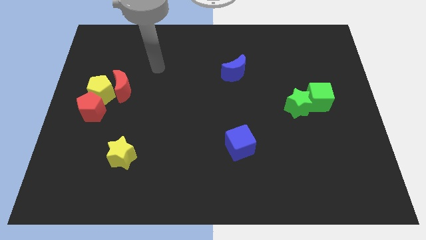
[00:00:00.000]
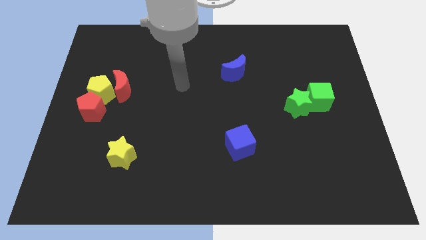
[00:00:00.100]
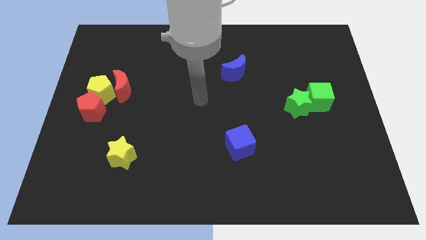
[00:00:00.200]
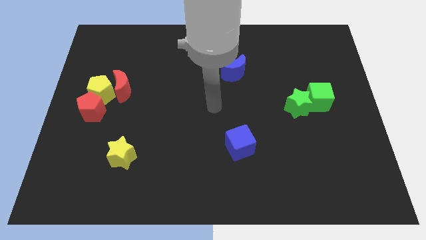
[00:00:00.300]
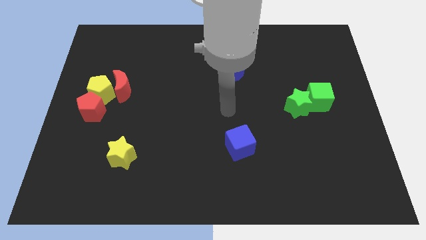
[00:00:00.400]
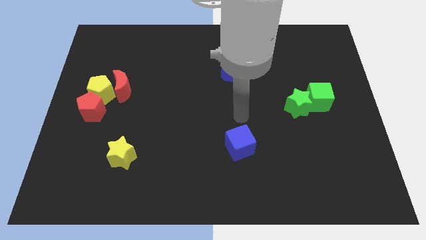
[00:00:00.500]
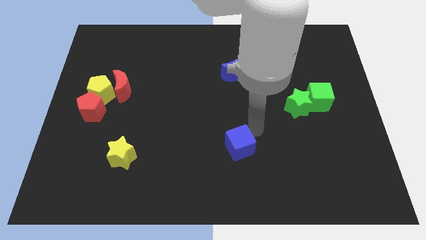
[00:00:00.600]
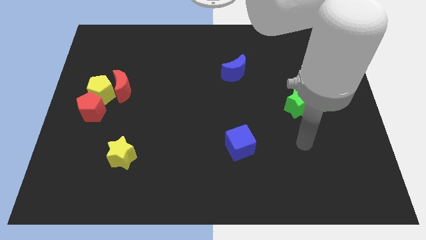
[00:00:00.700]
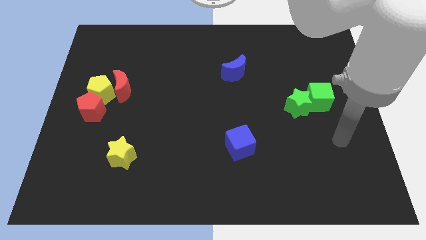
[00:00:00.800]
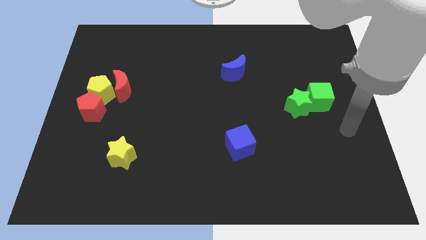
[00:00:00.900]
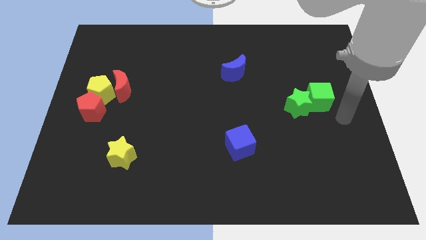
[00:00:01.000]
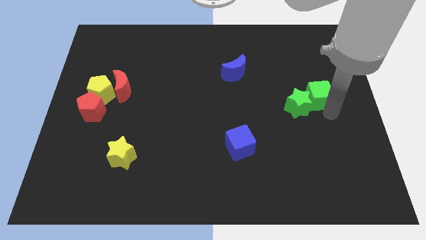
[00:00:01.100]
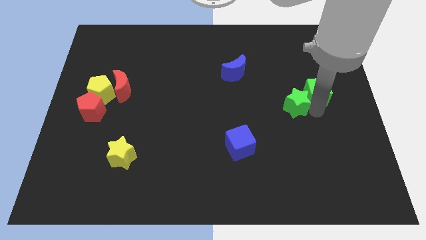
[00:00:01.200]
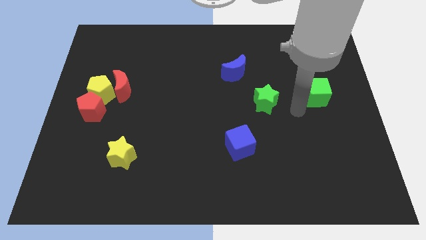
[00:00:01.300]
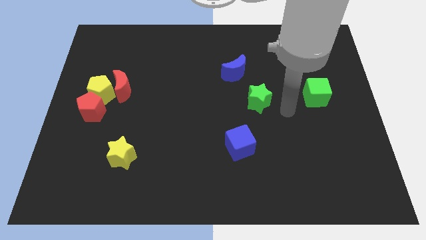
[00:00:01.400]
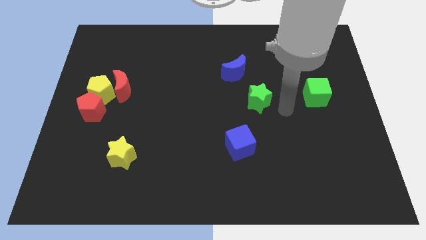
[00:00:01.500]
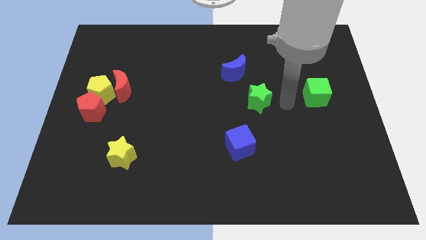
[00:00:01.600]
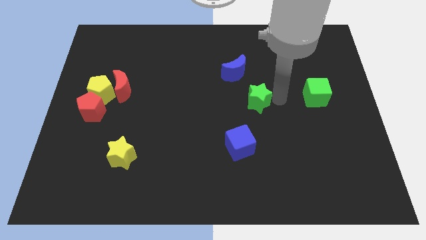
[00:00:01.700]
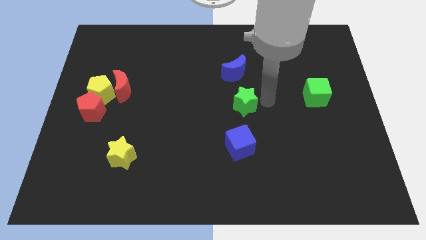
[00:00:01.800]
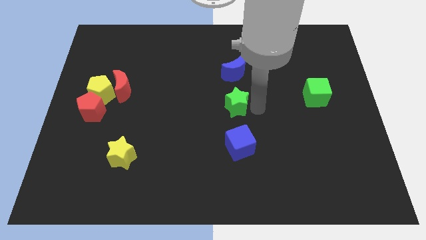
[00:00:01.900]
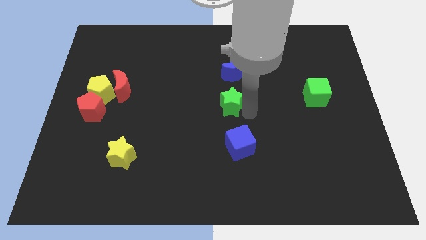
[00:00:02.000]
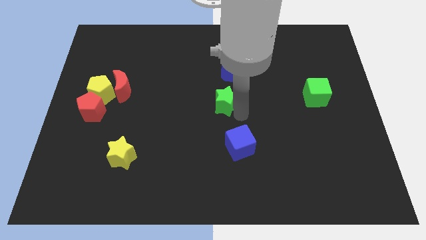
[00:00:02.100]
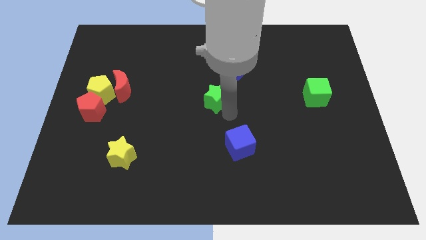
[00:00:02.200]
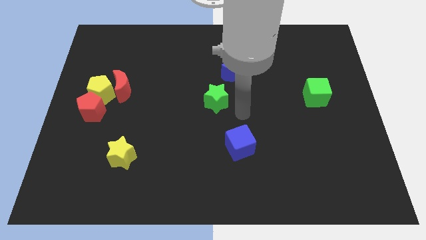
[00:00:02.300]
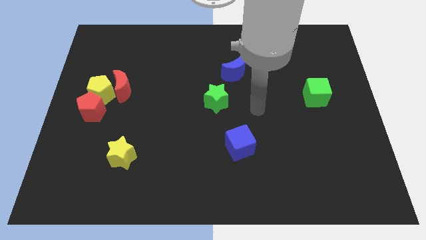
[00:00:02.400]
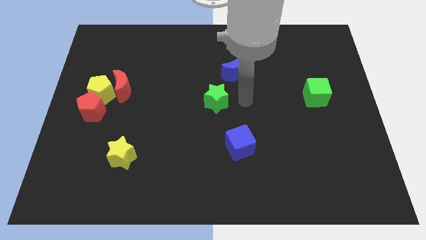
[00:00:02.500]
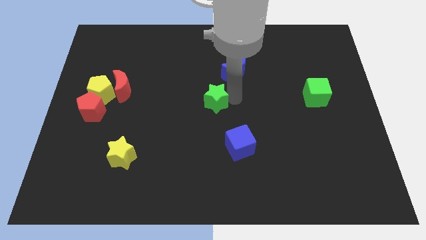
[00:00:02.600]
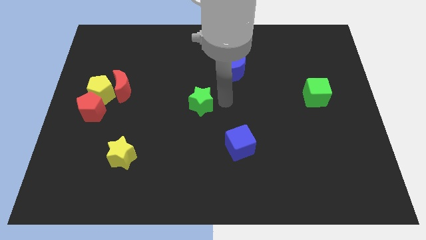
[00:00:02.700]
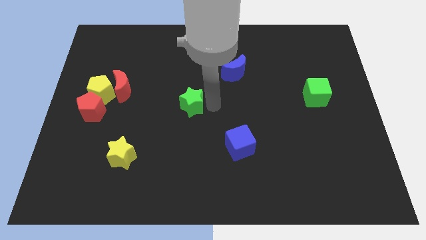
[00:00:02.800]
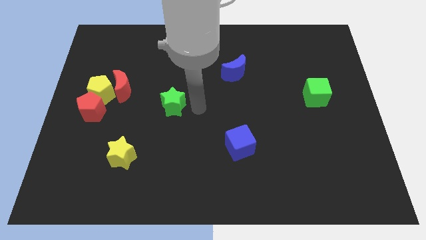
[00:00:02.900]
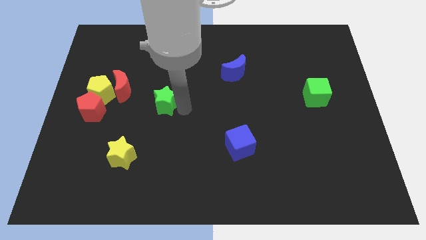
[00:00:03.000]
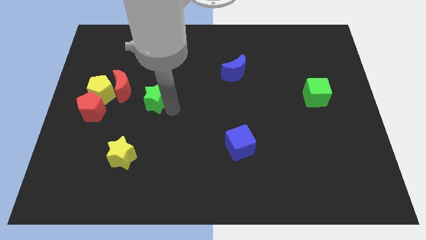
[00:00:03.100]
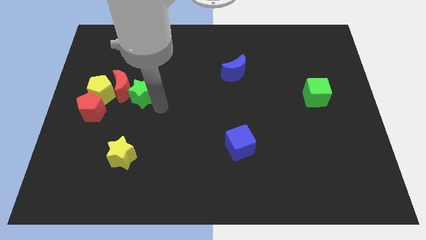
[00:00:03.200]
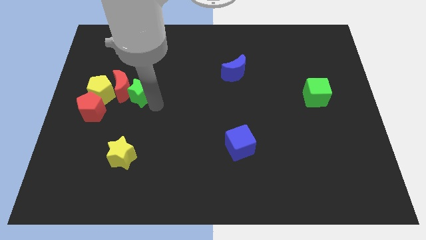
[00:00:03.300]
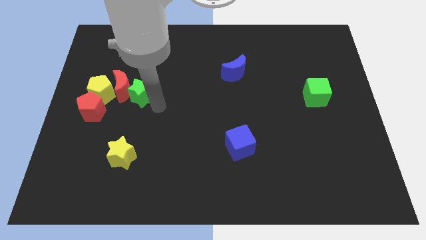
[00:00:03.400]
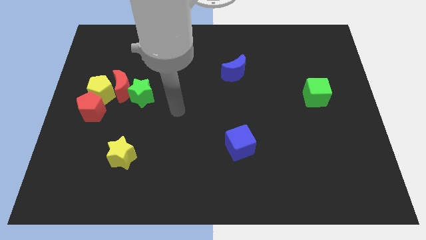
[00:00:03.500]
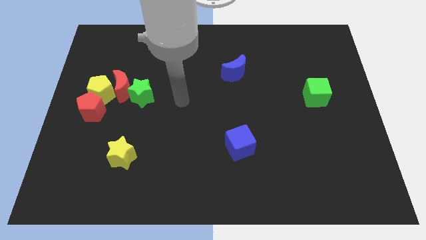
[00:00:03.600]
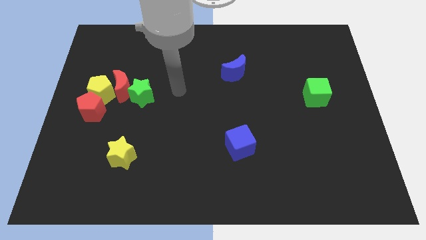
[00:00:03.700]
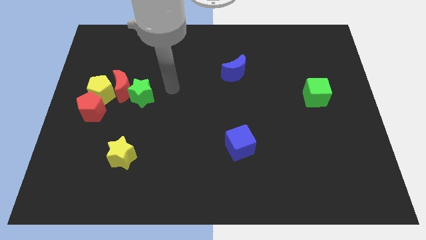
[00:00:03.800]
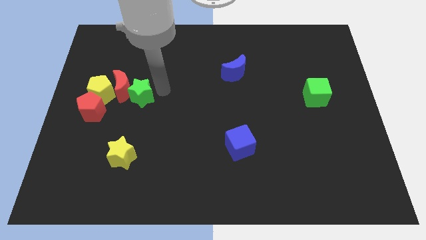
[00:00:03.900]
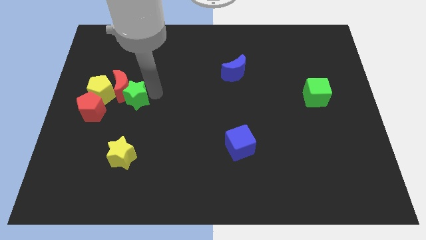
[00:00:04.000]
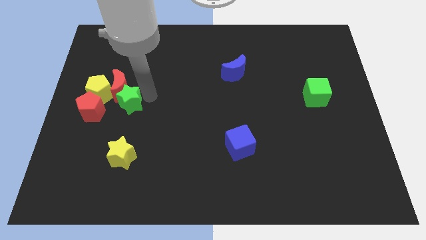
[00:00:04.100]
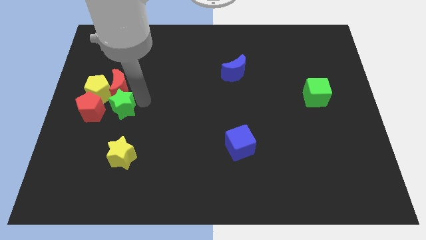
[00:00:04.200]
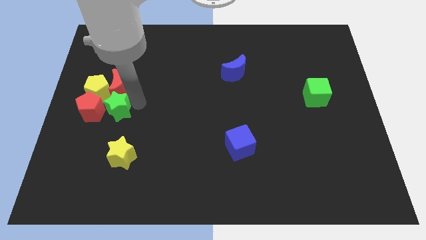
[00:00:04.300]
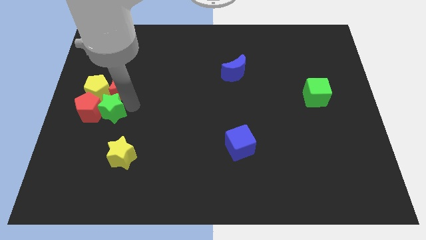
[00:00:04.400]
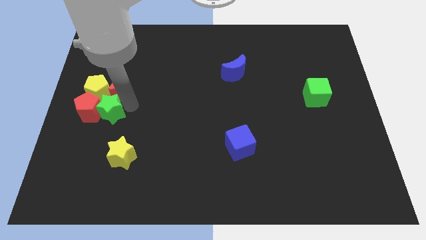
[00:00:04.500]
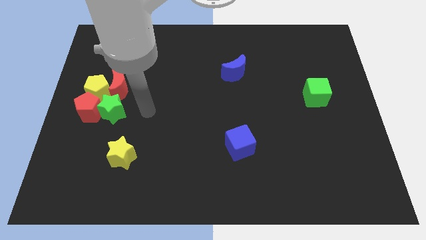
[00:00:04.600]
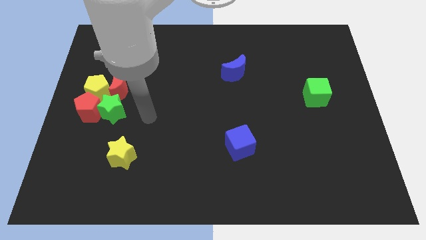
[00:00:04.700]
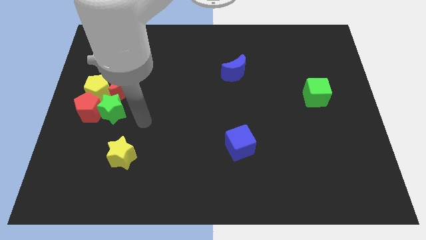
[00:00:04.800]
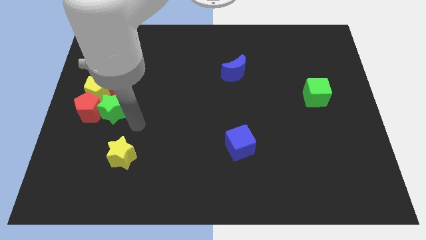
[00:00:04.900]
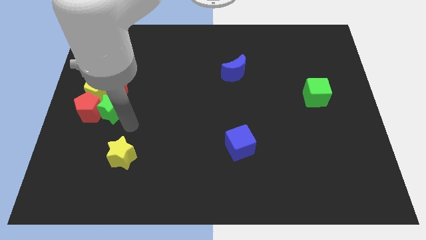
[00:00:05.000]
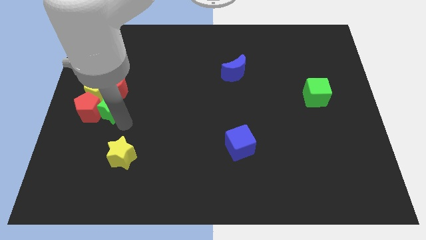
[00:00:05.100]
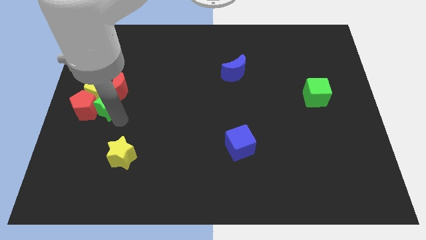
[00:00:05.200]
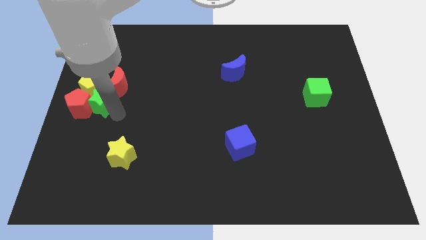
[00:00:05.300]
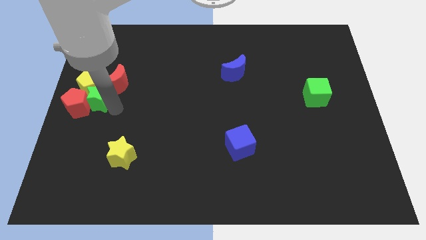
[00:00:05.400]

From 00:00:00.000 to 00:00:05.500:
push the green star close to the yellow pentagon

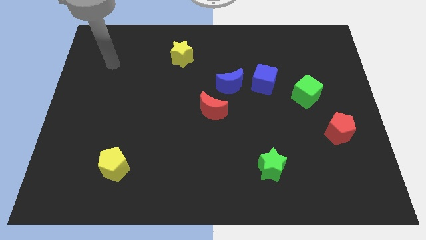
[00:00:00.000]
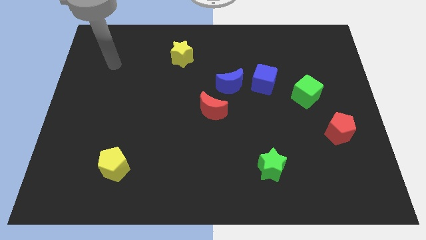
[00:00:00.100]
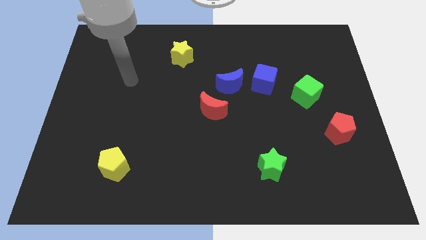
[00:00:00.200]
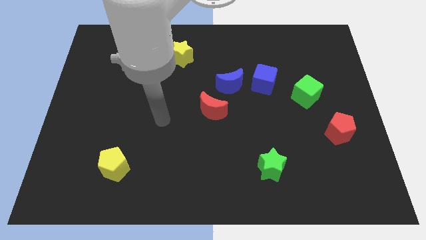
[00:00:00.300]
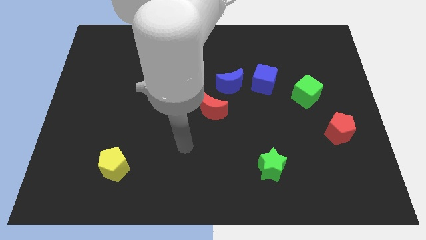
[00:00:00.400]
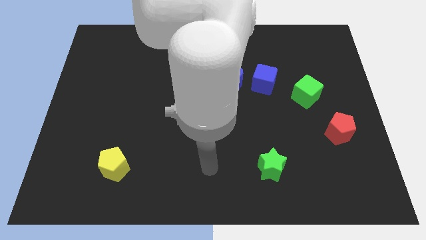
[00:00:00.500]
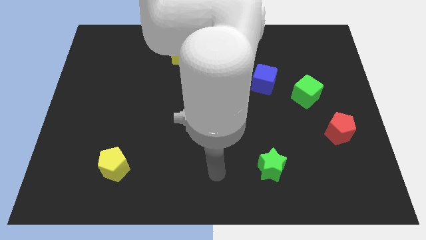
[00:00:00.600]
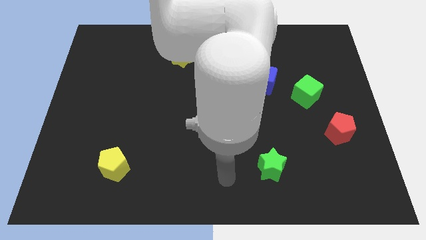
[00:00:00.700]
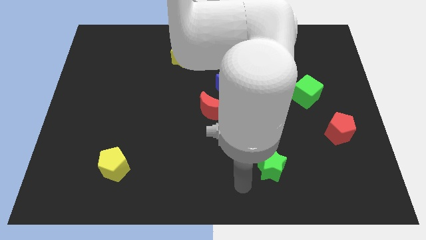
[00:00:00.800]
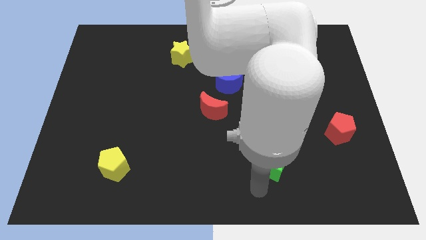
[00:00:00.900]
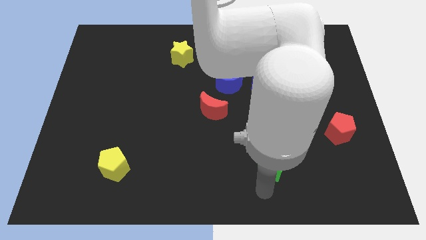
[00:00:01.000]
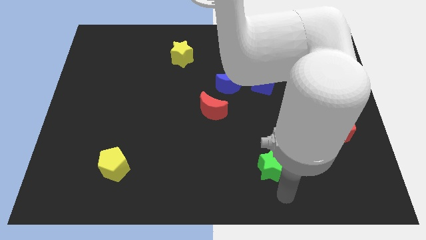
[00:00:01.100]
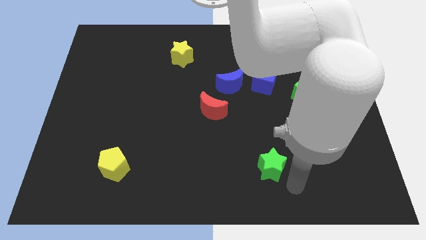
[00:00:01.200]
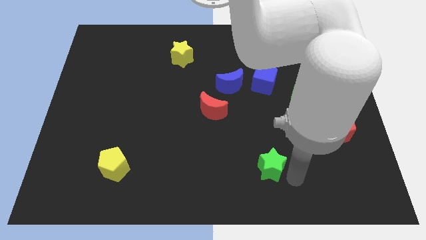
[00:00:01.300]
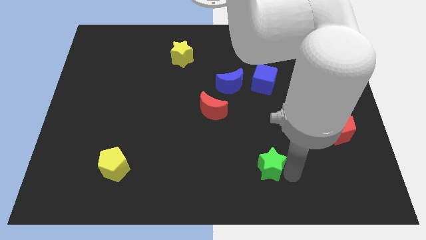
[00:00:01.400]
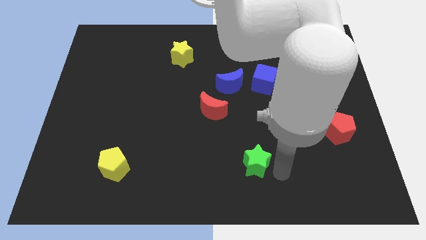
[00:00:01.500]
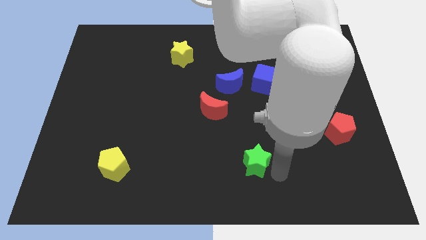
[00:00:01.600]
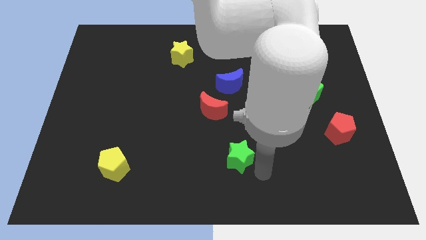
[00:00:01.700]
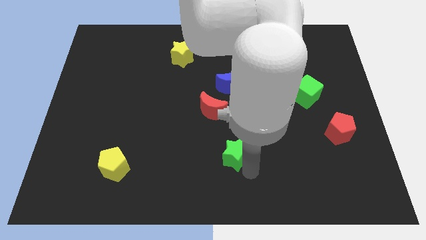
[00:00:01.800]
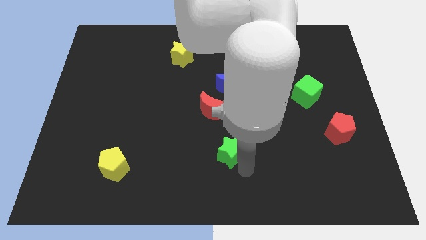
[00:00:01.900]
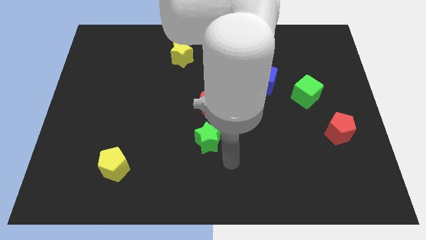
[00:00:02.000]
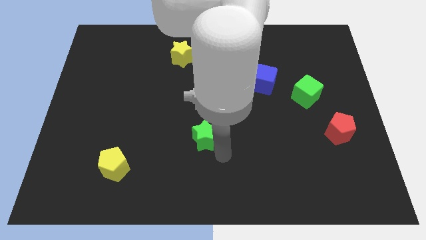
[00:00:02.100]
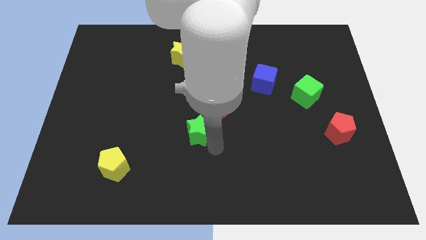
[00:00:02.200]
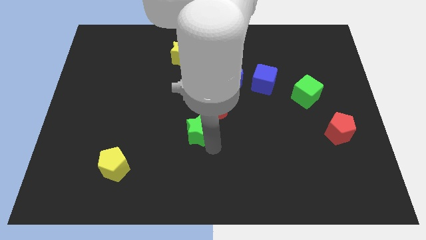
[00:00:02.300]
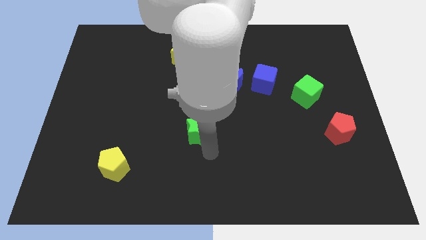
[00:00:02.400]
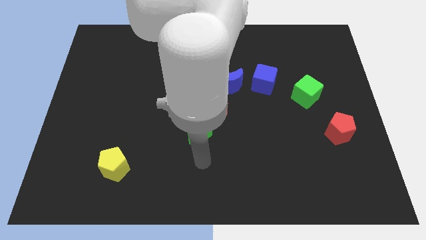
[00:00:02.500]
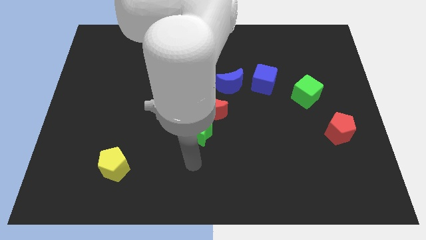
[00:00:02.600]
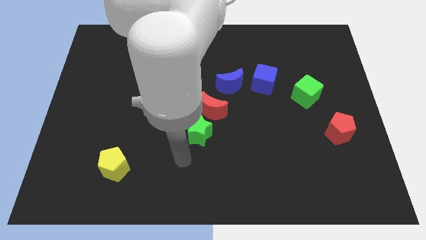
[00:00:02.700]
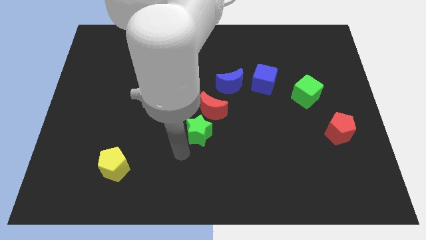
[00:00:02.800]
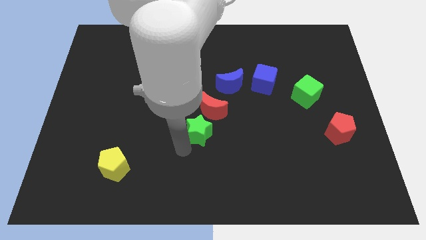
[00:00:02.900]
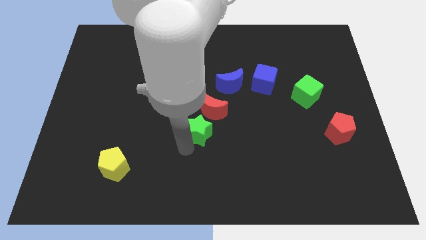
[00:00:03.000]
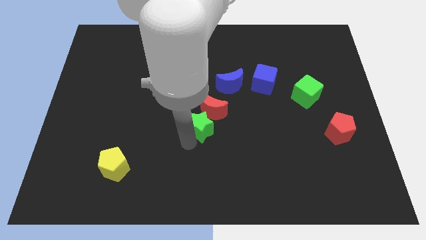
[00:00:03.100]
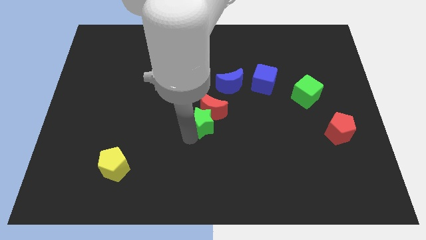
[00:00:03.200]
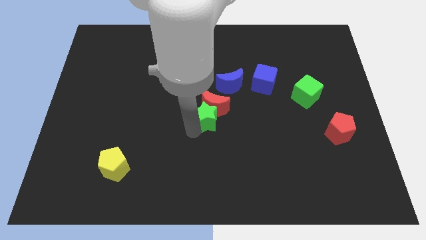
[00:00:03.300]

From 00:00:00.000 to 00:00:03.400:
slide the green star close to the red moon
